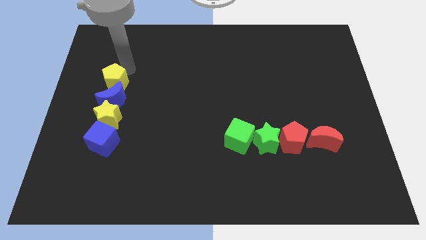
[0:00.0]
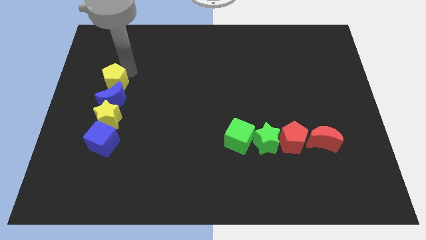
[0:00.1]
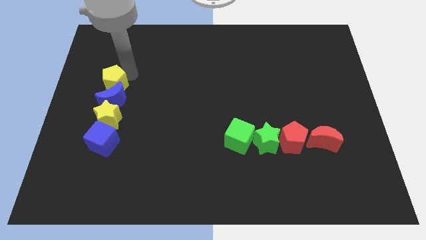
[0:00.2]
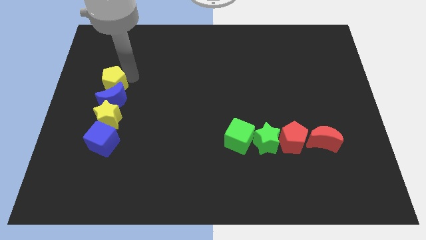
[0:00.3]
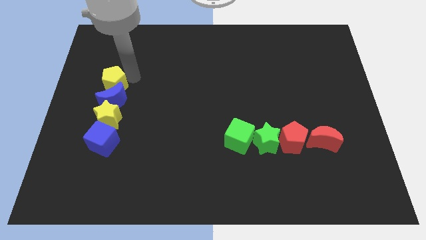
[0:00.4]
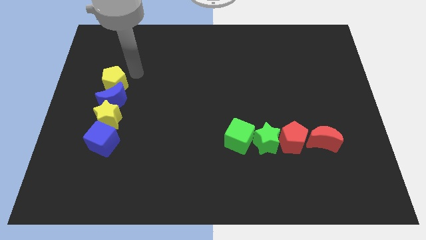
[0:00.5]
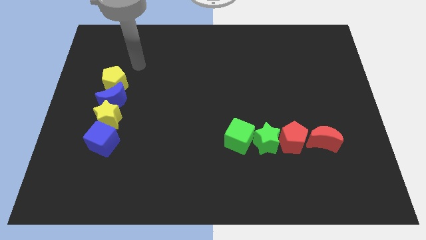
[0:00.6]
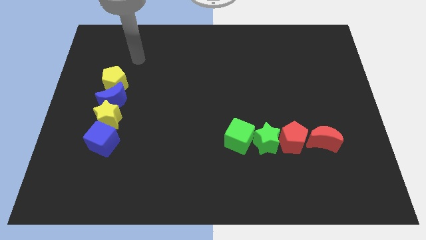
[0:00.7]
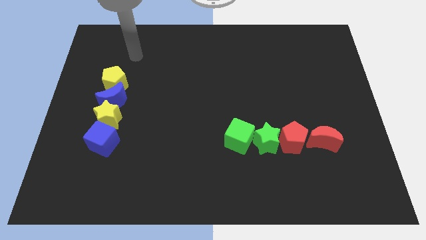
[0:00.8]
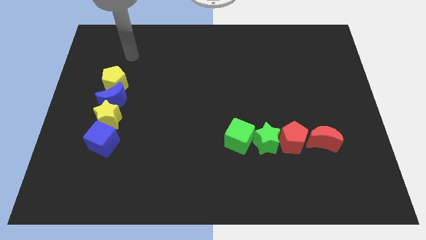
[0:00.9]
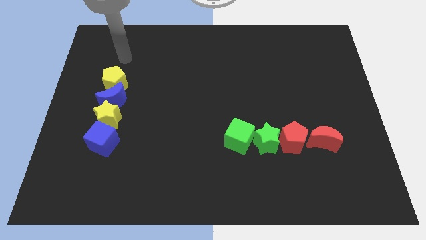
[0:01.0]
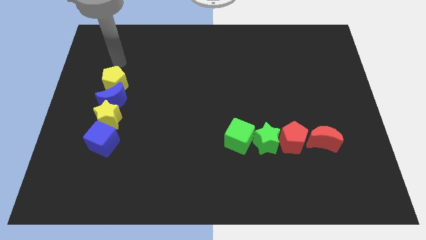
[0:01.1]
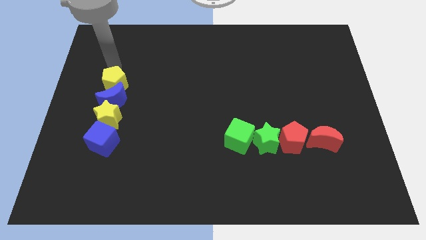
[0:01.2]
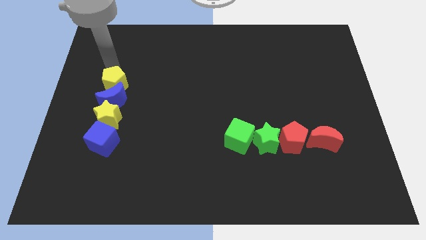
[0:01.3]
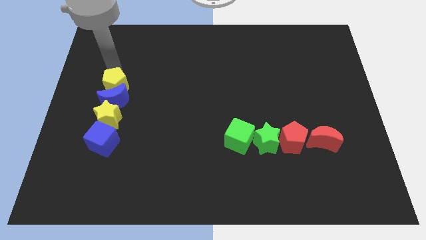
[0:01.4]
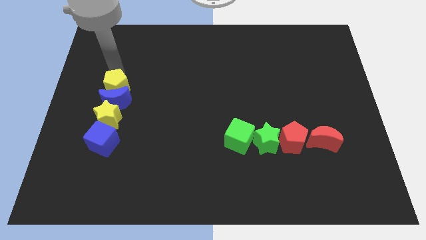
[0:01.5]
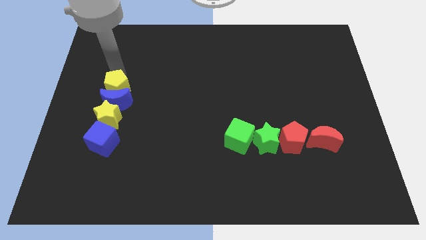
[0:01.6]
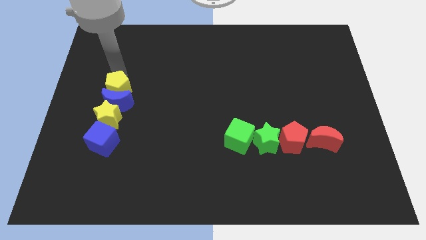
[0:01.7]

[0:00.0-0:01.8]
push the yellow pentagon into the blue crescent

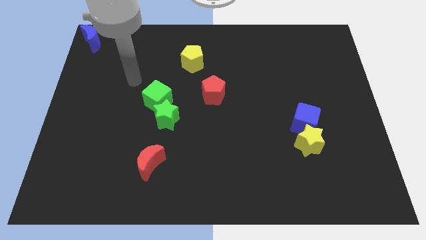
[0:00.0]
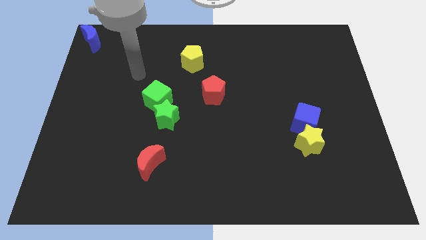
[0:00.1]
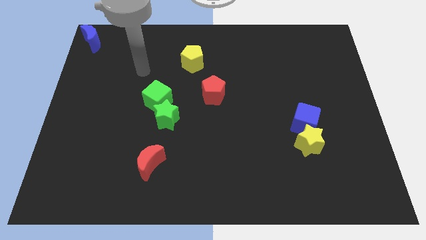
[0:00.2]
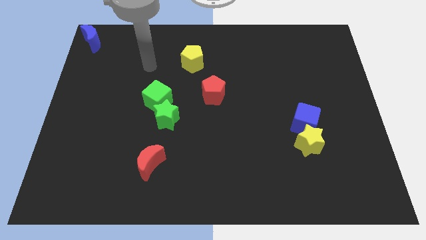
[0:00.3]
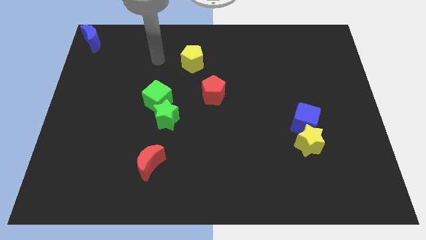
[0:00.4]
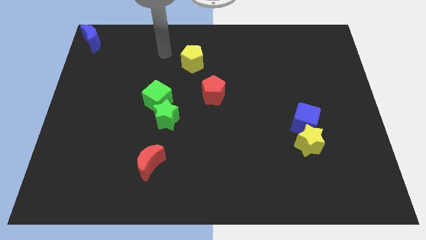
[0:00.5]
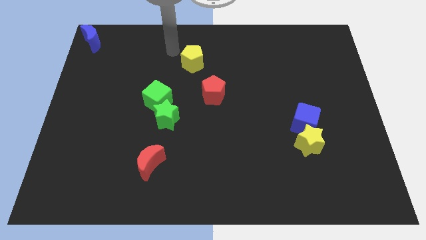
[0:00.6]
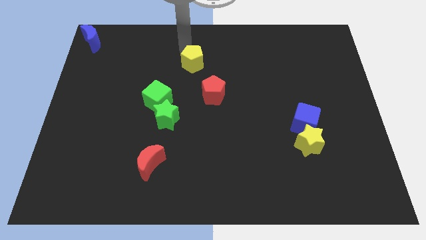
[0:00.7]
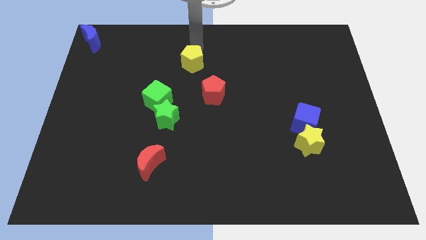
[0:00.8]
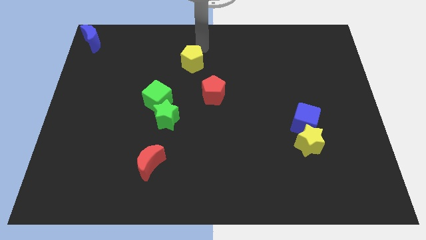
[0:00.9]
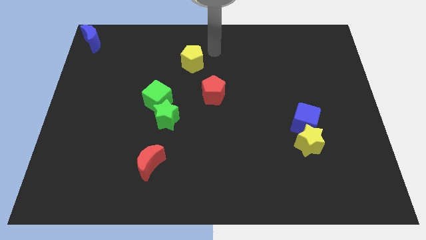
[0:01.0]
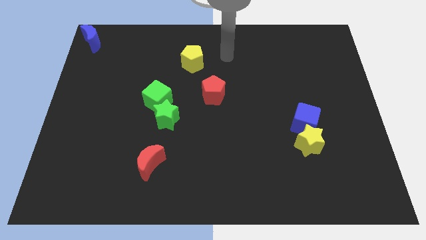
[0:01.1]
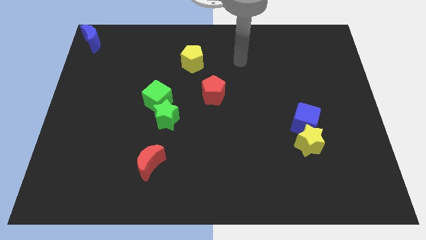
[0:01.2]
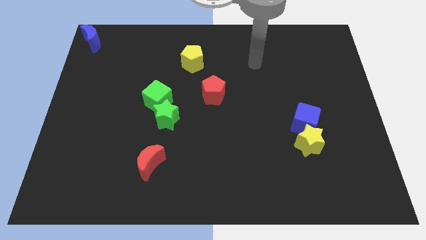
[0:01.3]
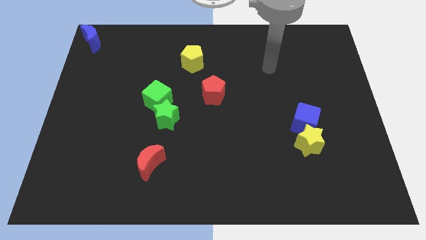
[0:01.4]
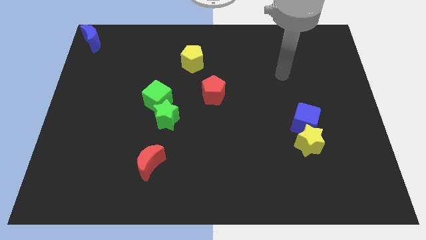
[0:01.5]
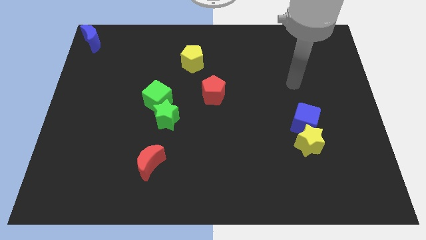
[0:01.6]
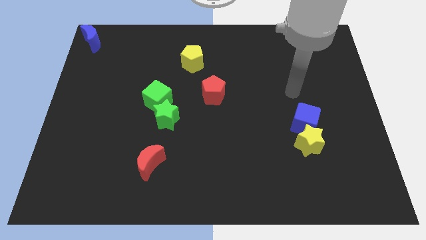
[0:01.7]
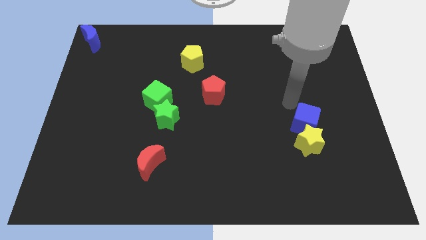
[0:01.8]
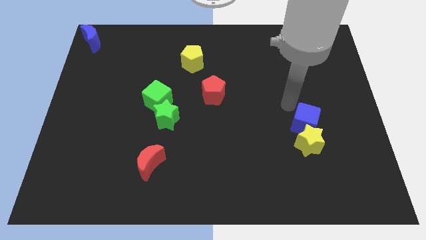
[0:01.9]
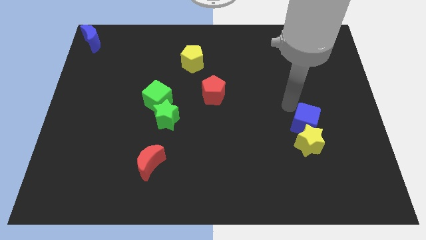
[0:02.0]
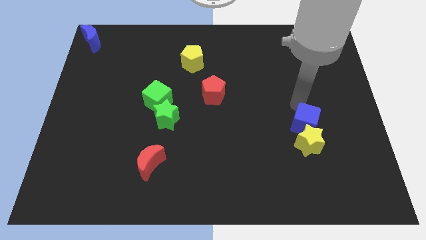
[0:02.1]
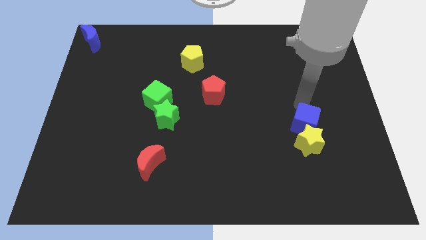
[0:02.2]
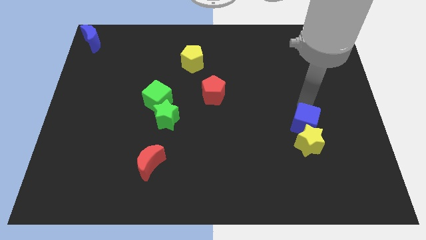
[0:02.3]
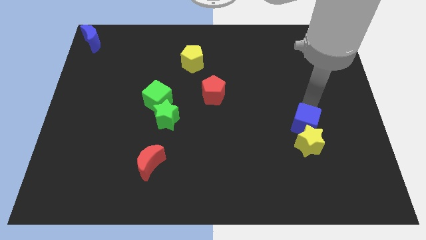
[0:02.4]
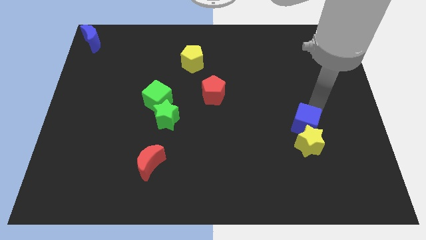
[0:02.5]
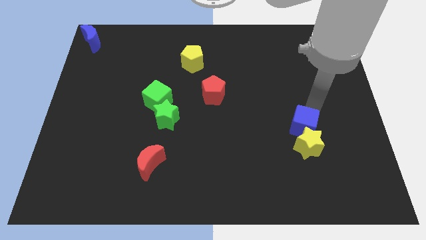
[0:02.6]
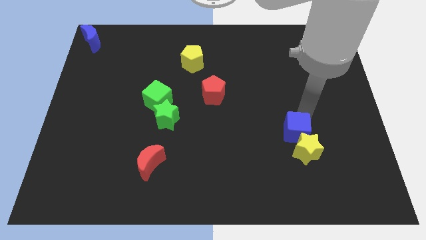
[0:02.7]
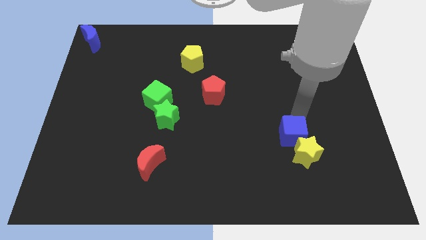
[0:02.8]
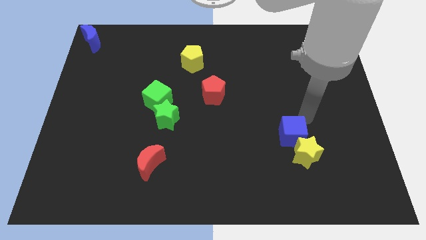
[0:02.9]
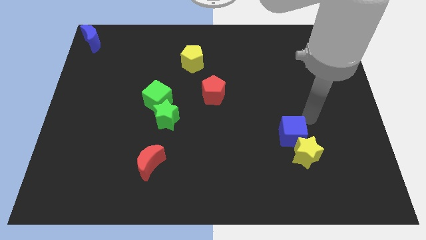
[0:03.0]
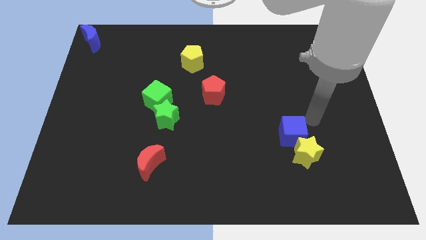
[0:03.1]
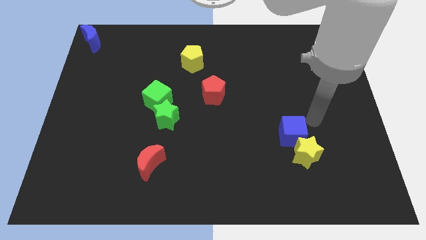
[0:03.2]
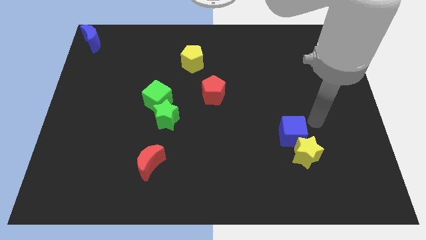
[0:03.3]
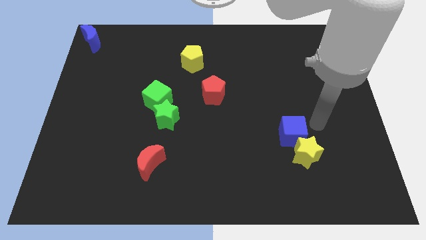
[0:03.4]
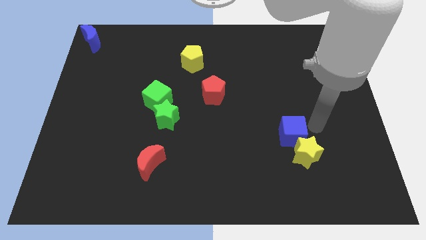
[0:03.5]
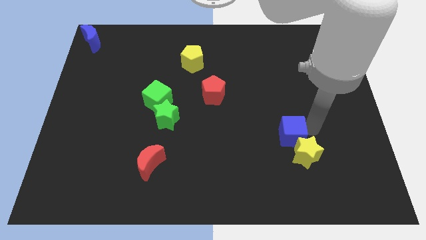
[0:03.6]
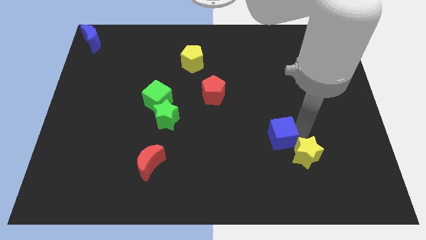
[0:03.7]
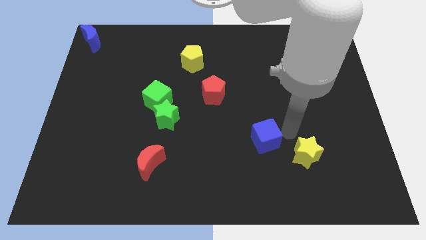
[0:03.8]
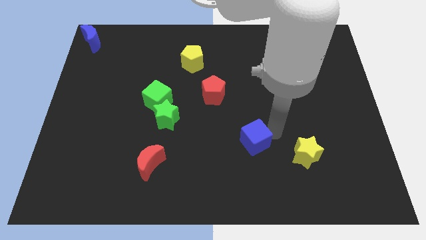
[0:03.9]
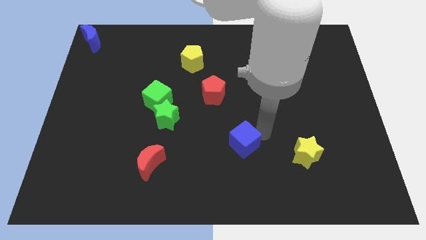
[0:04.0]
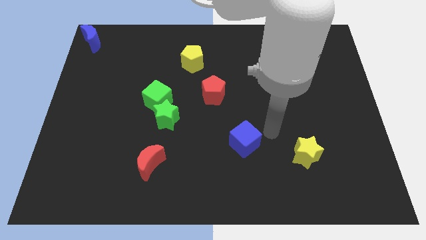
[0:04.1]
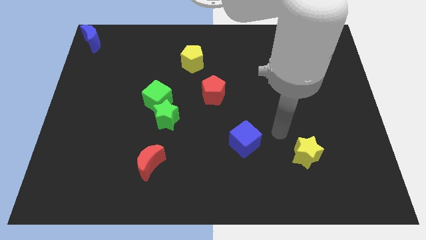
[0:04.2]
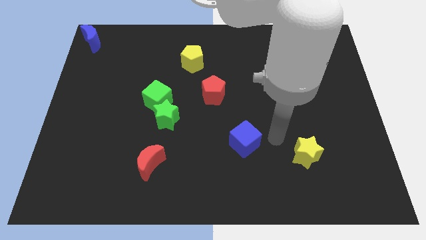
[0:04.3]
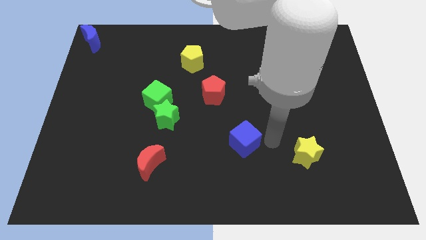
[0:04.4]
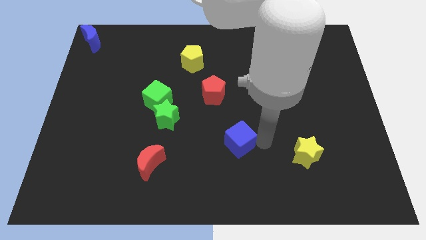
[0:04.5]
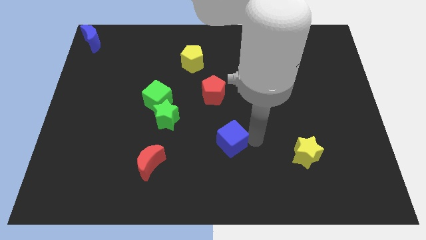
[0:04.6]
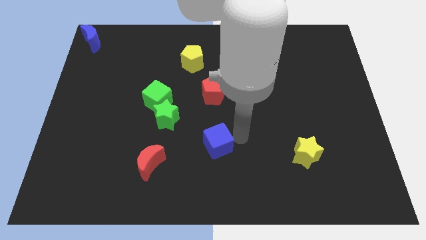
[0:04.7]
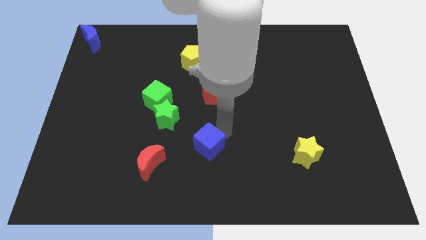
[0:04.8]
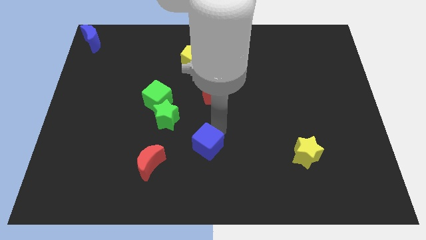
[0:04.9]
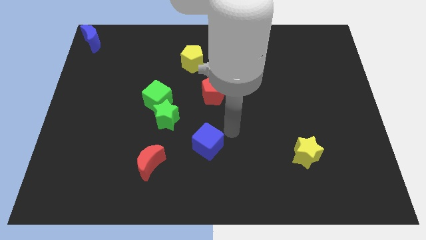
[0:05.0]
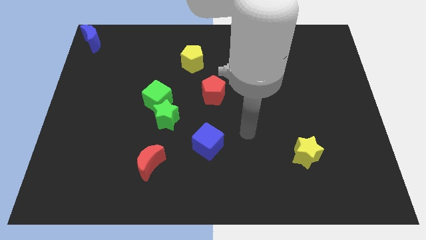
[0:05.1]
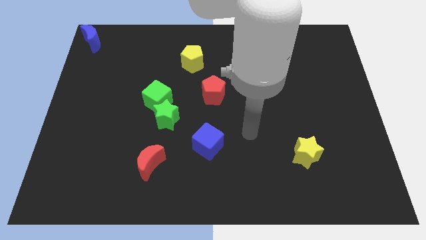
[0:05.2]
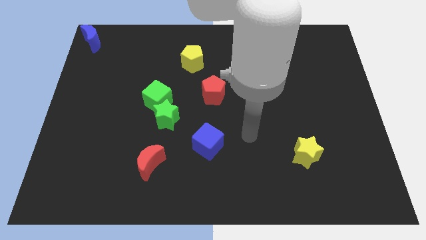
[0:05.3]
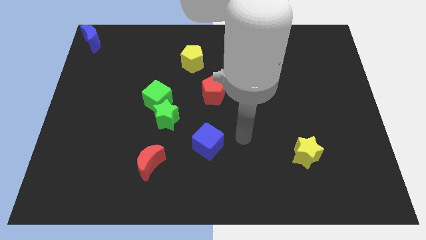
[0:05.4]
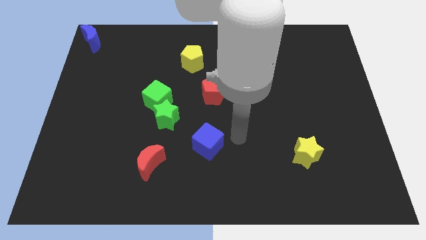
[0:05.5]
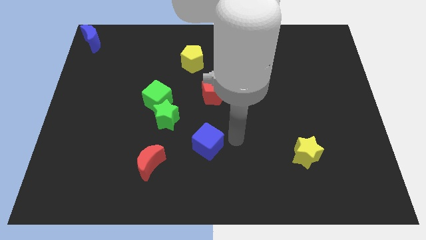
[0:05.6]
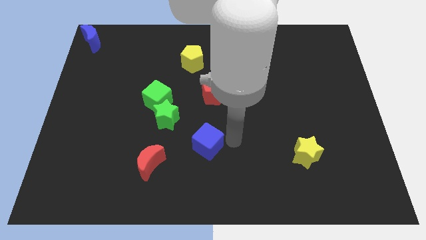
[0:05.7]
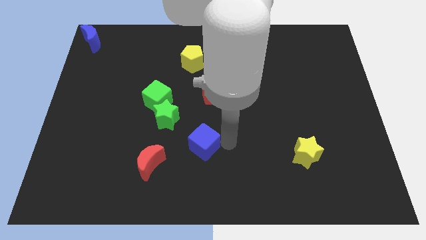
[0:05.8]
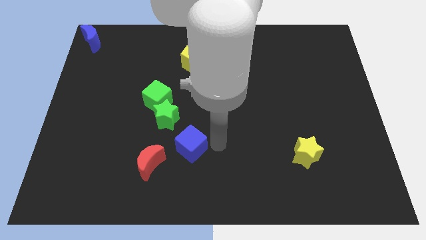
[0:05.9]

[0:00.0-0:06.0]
separate blue cube from the yellow star

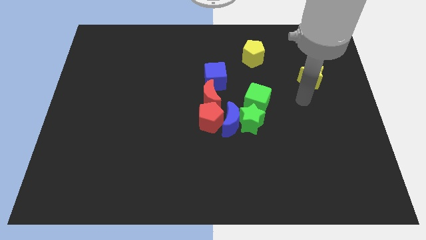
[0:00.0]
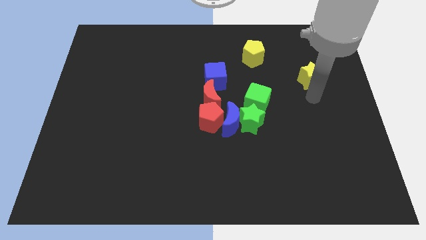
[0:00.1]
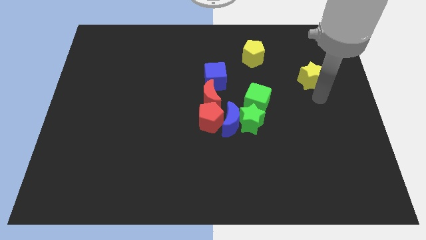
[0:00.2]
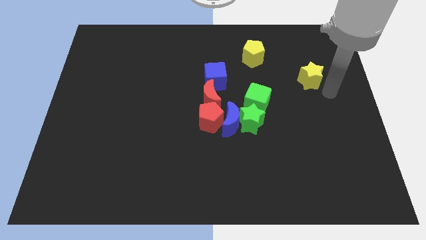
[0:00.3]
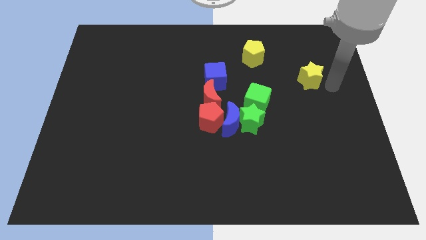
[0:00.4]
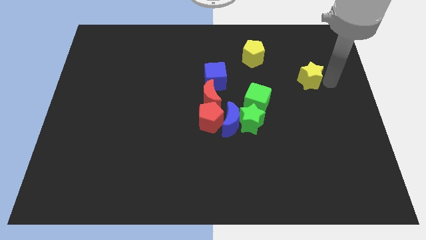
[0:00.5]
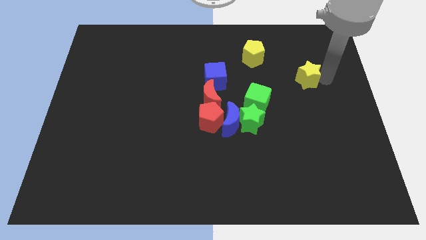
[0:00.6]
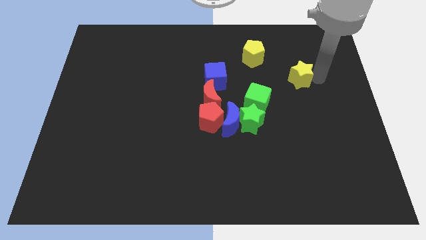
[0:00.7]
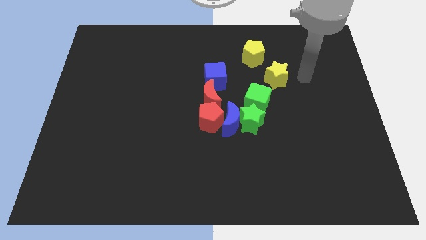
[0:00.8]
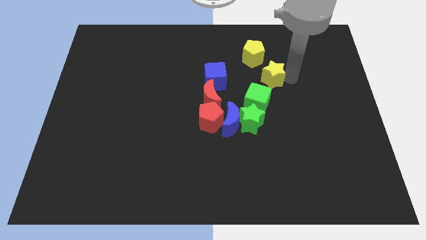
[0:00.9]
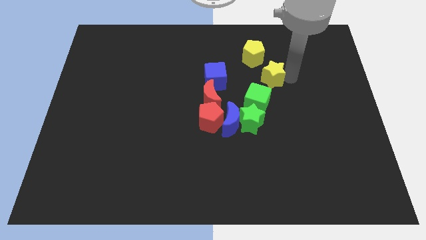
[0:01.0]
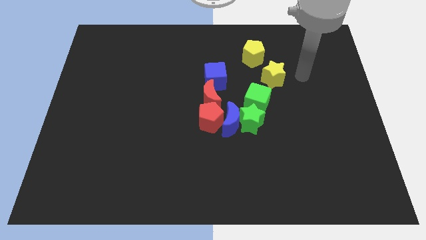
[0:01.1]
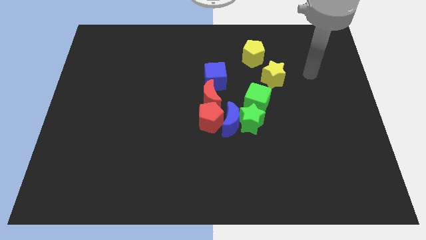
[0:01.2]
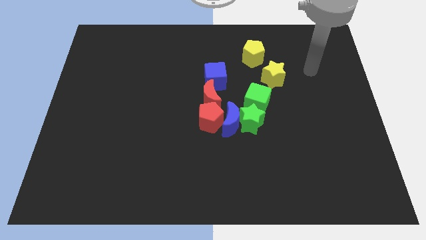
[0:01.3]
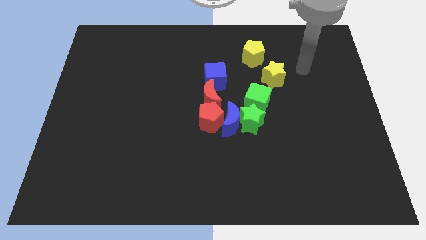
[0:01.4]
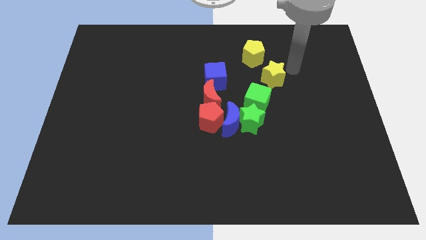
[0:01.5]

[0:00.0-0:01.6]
move the yellow star slightly top right of the green star
